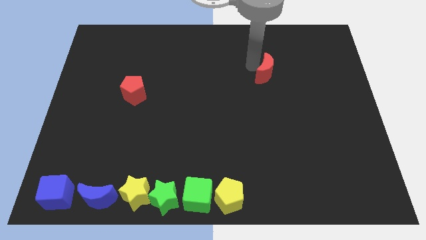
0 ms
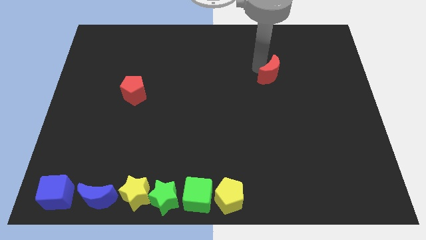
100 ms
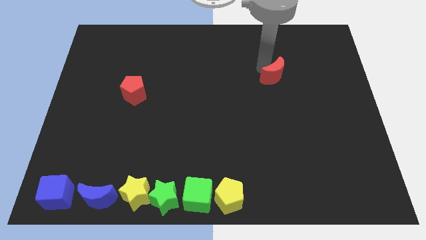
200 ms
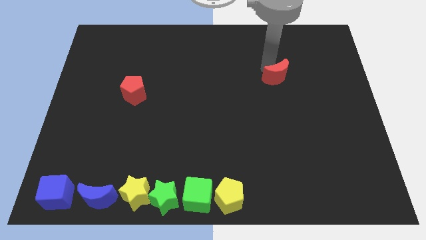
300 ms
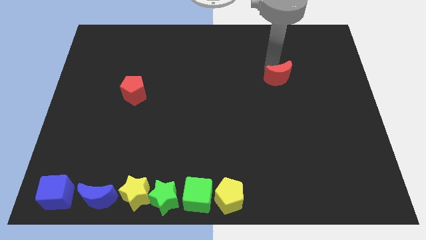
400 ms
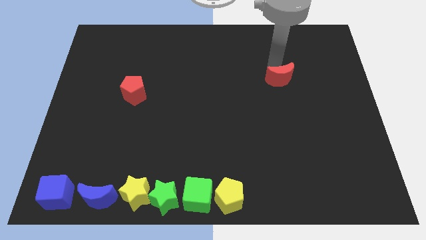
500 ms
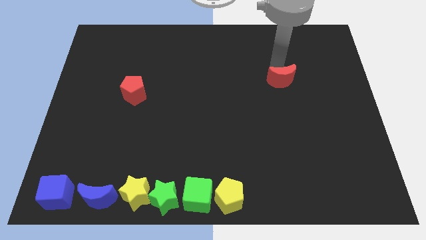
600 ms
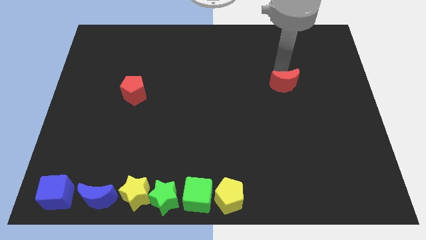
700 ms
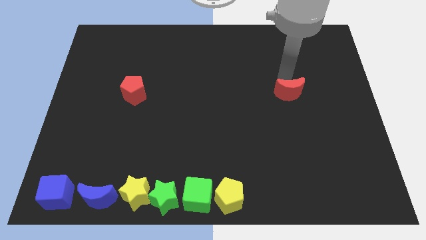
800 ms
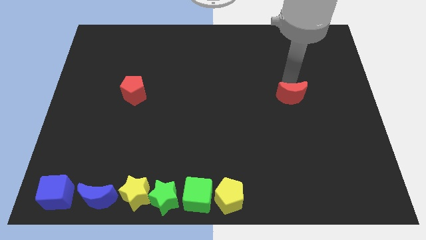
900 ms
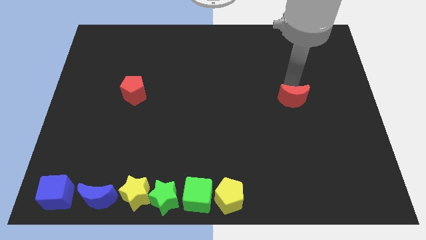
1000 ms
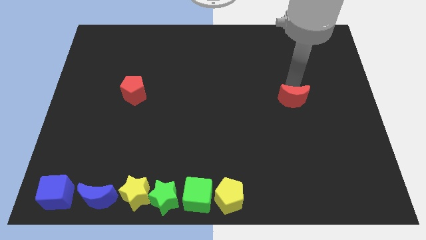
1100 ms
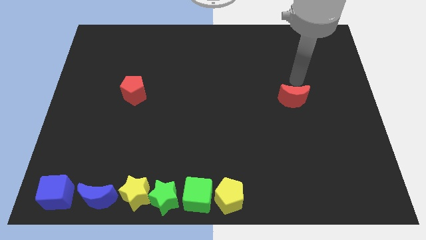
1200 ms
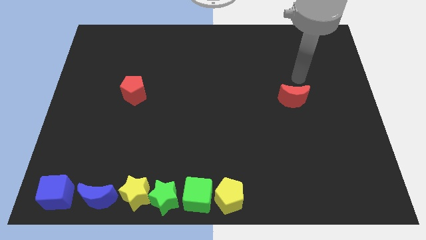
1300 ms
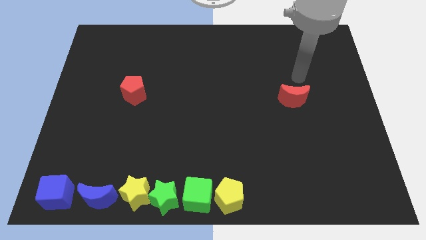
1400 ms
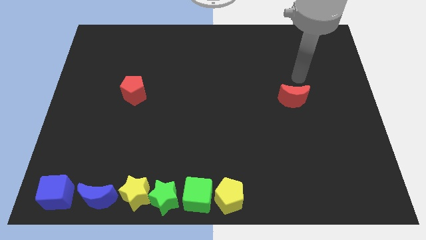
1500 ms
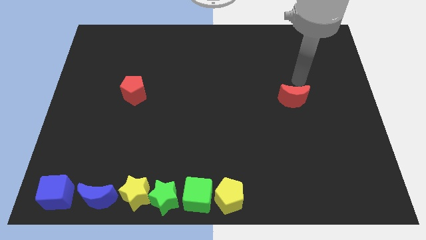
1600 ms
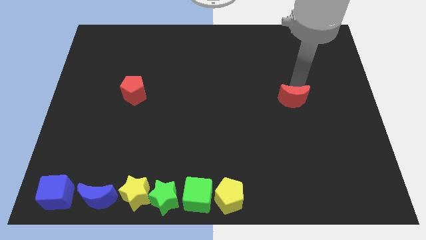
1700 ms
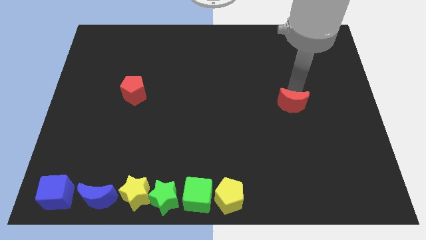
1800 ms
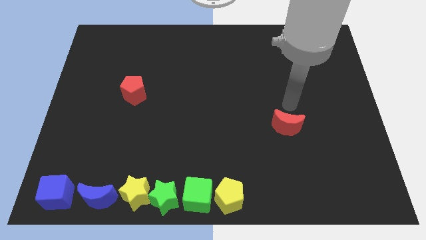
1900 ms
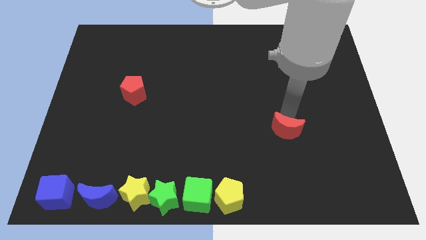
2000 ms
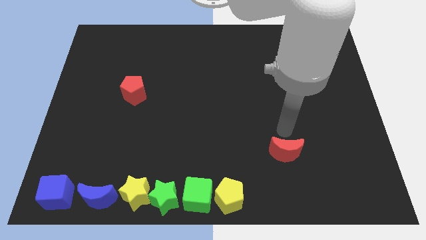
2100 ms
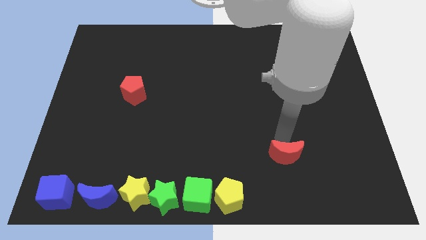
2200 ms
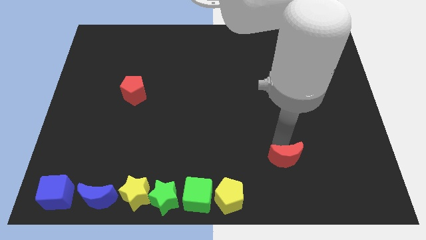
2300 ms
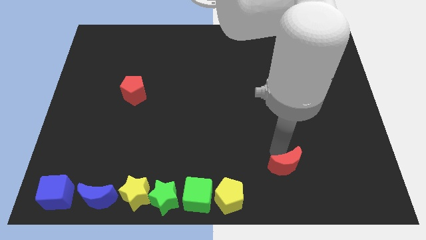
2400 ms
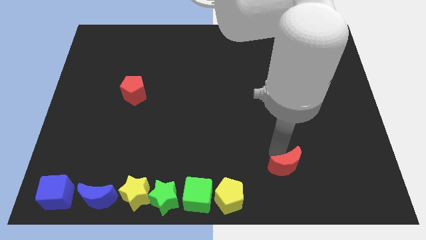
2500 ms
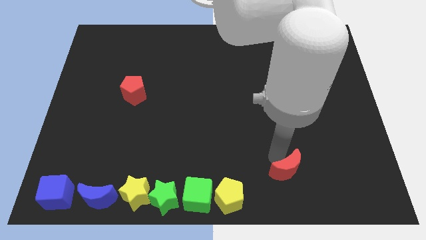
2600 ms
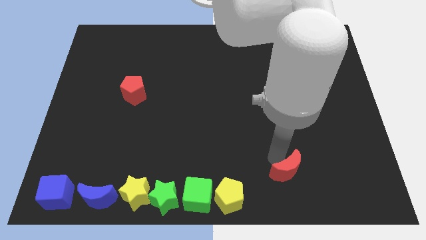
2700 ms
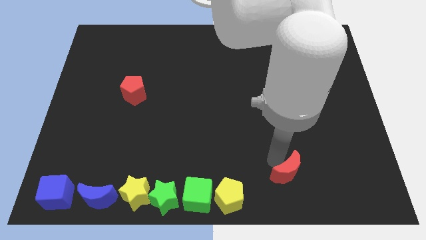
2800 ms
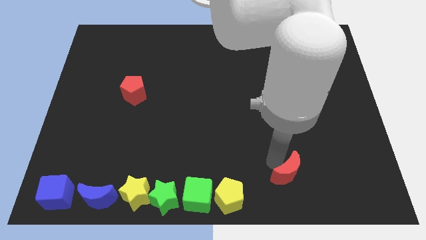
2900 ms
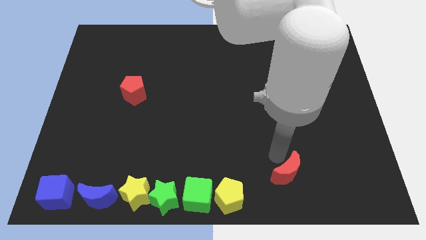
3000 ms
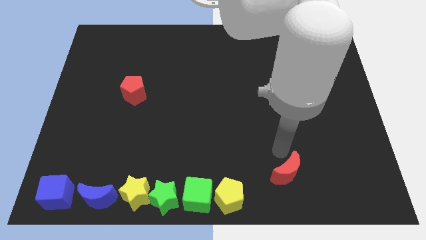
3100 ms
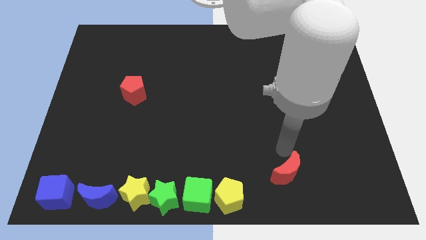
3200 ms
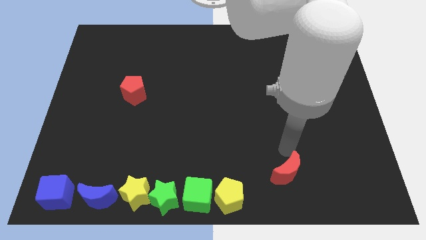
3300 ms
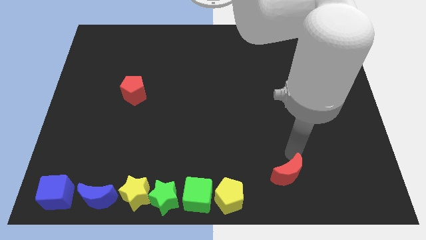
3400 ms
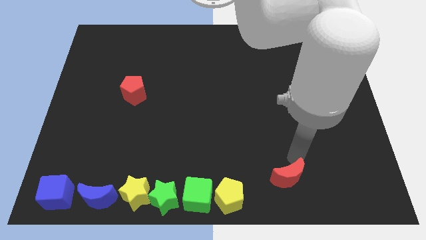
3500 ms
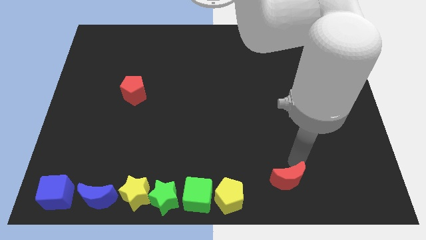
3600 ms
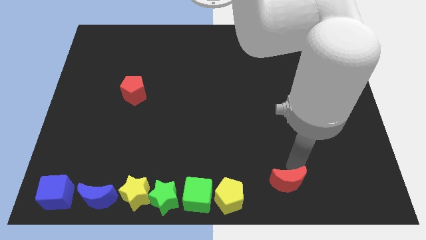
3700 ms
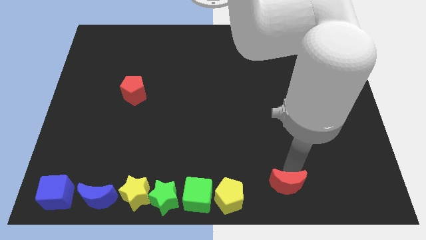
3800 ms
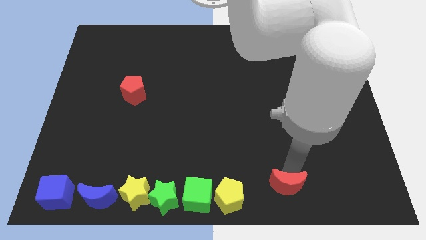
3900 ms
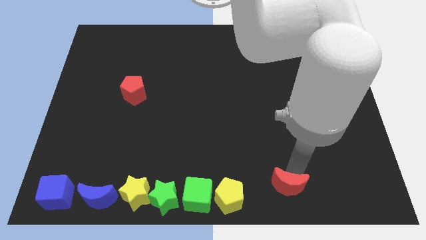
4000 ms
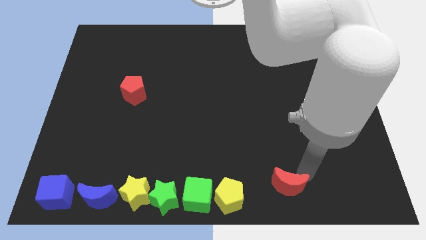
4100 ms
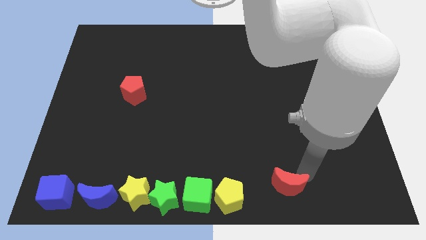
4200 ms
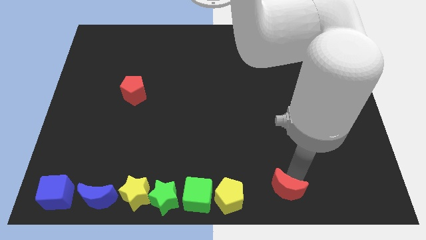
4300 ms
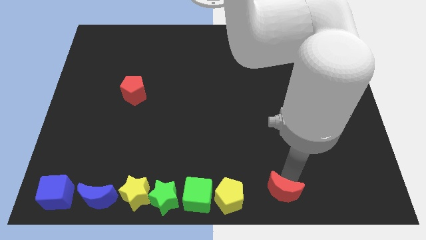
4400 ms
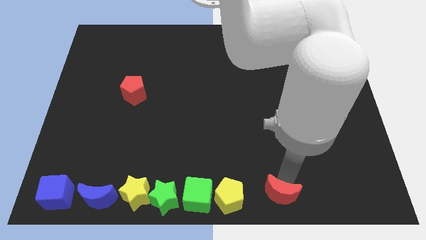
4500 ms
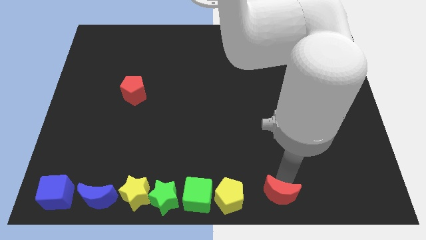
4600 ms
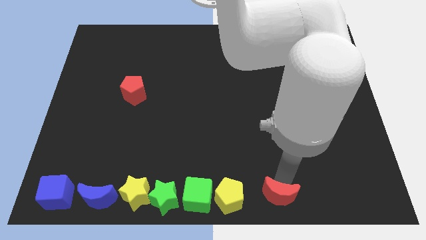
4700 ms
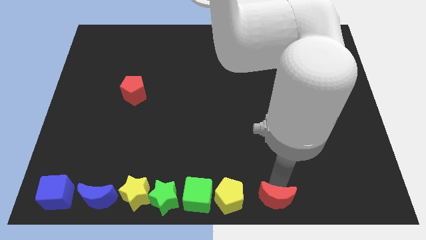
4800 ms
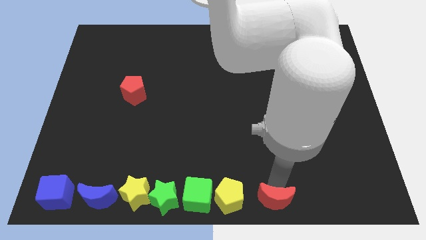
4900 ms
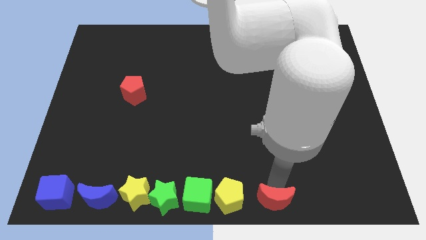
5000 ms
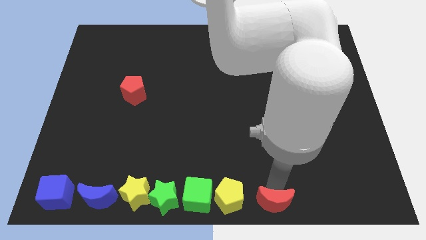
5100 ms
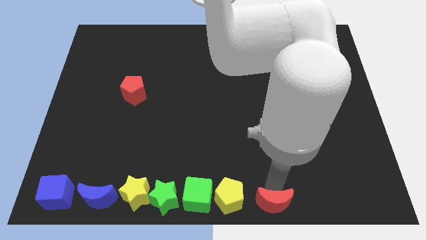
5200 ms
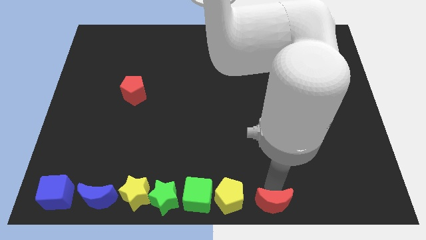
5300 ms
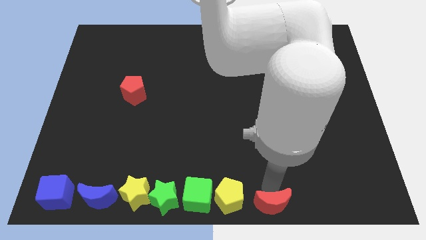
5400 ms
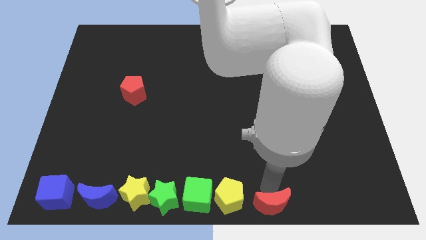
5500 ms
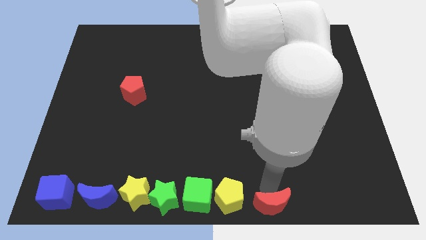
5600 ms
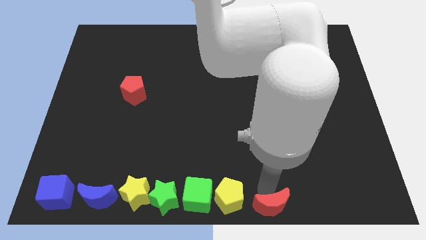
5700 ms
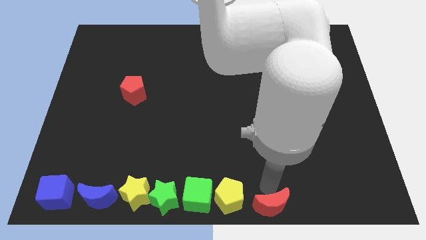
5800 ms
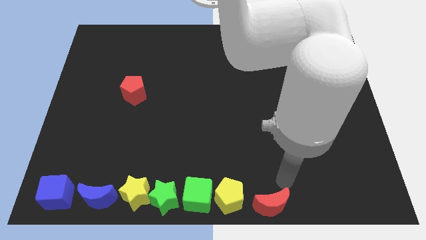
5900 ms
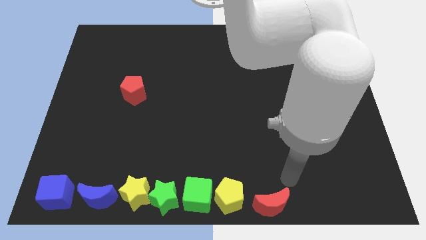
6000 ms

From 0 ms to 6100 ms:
put the red crescent to the right of the yellow pentagon

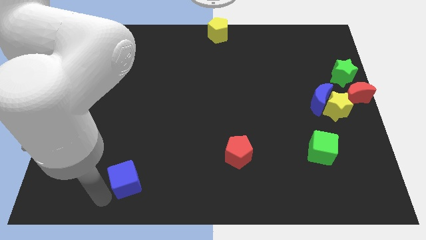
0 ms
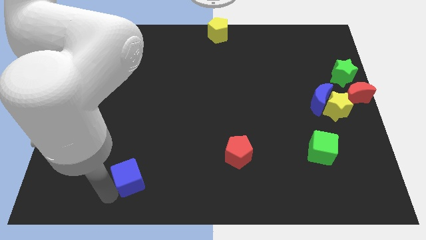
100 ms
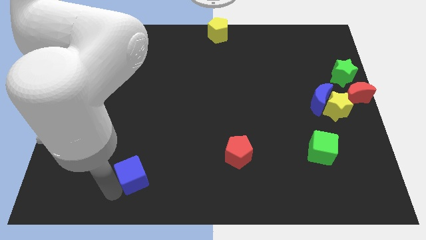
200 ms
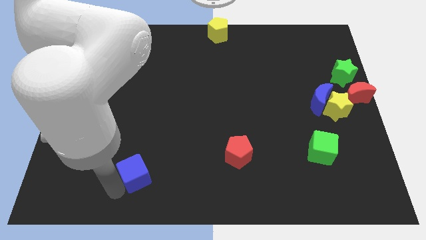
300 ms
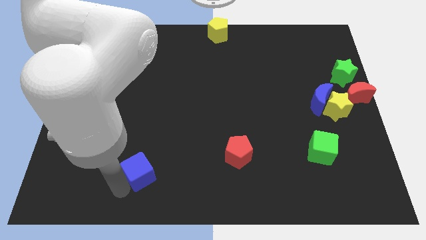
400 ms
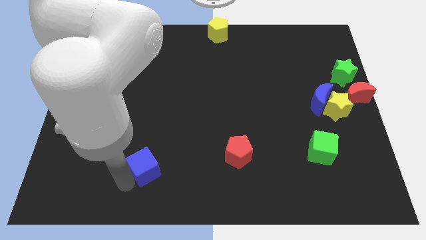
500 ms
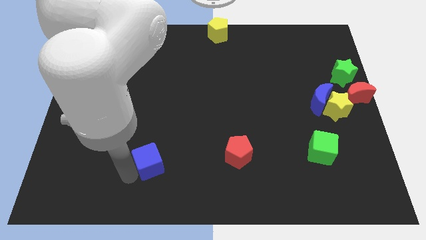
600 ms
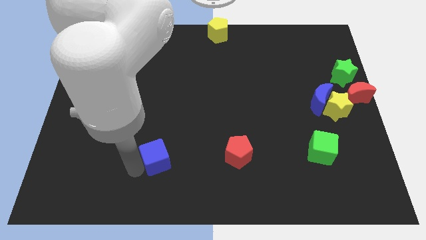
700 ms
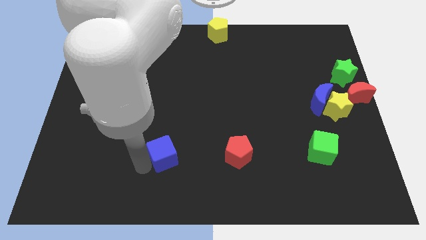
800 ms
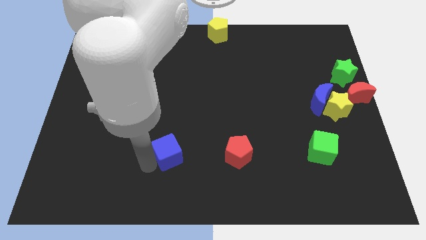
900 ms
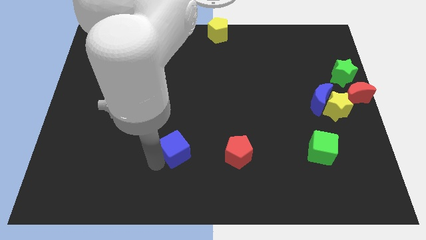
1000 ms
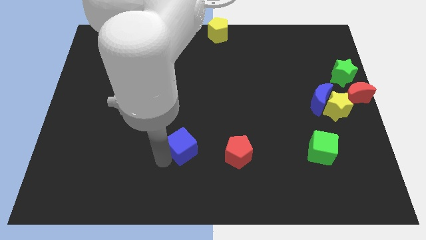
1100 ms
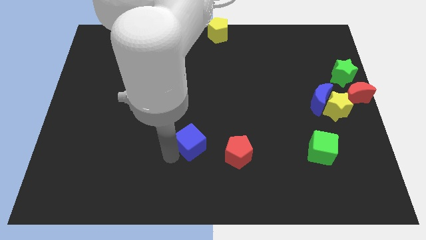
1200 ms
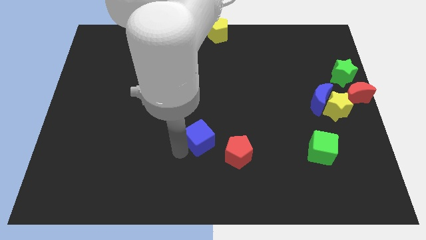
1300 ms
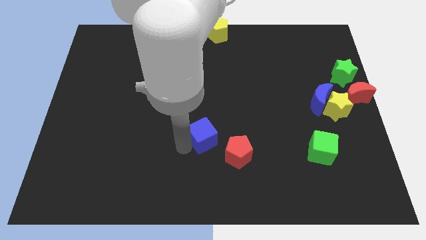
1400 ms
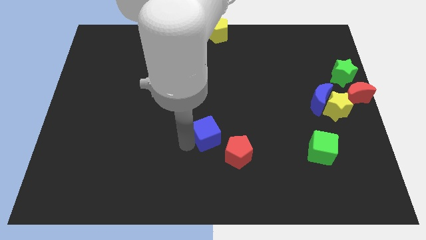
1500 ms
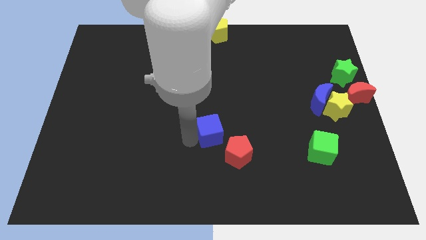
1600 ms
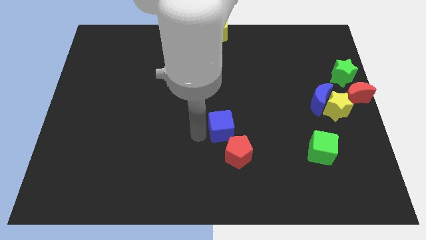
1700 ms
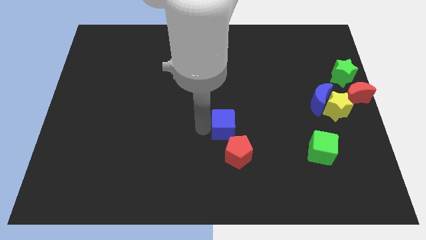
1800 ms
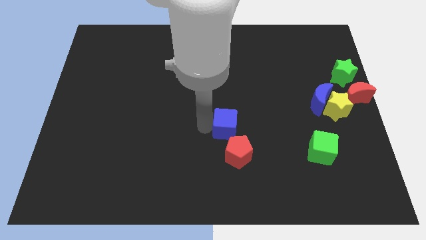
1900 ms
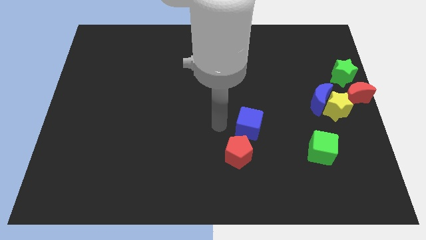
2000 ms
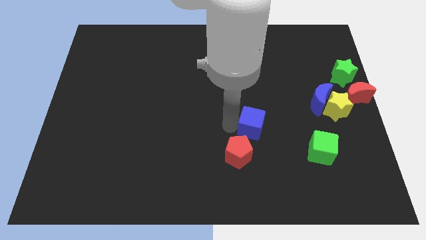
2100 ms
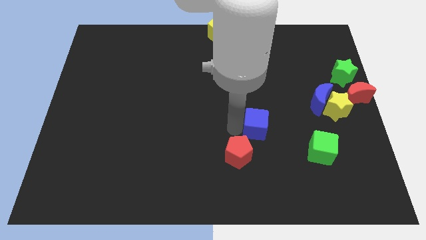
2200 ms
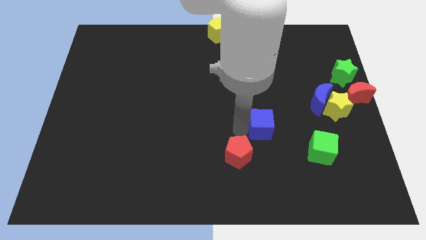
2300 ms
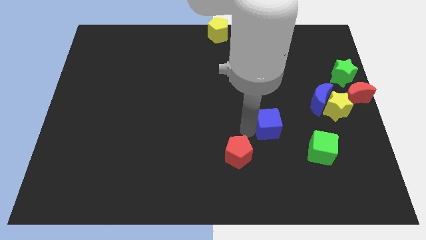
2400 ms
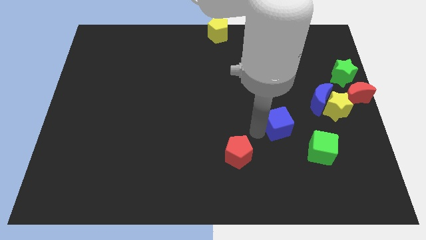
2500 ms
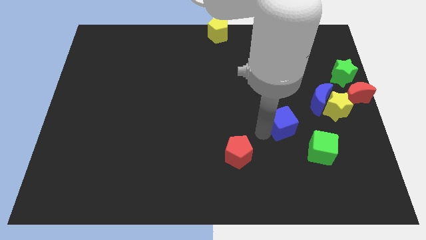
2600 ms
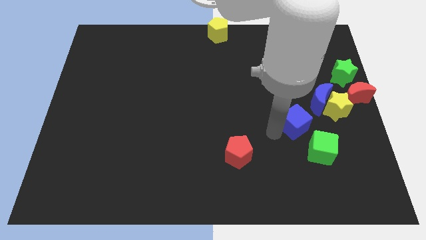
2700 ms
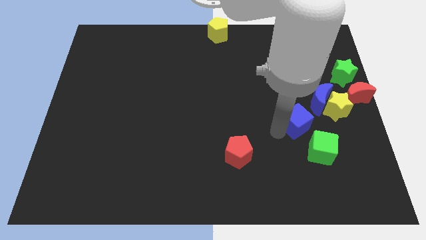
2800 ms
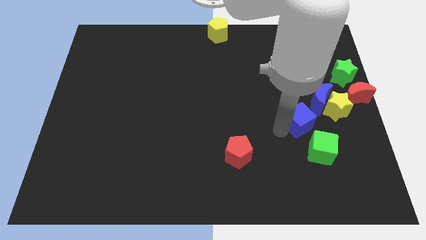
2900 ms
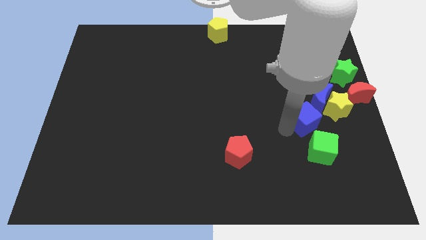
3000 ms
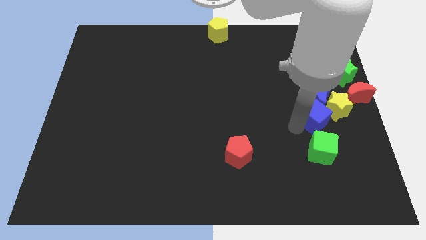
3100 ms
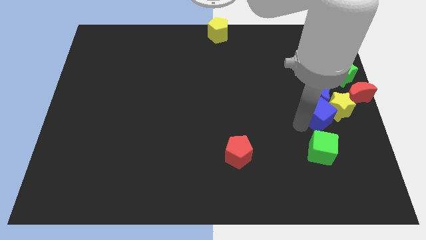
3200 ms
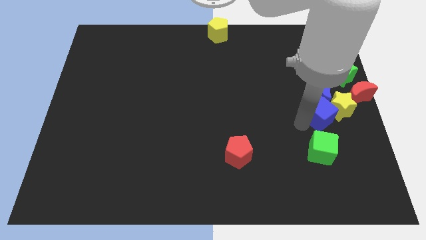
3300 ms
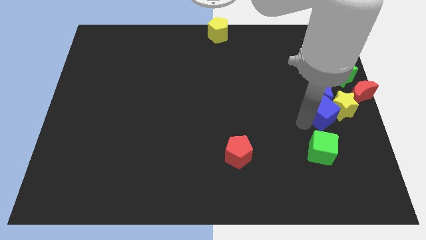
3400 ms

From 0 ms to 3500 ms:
push the blue cube into the group of blocks
